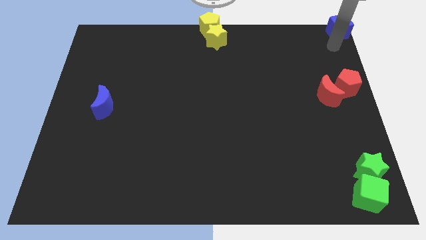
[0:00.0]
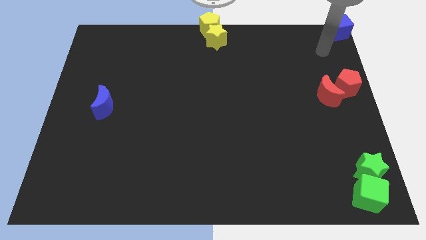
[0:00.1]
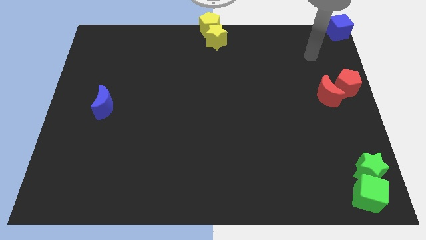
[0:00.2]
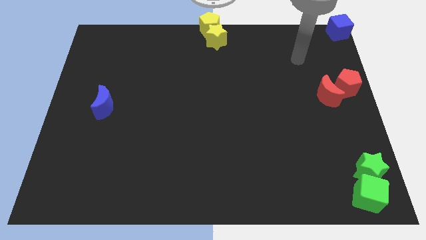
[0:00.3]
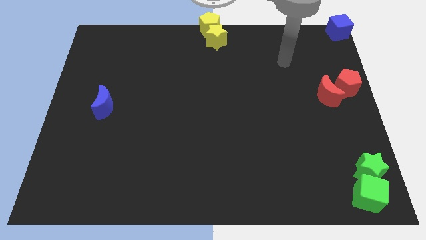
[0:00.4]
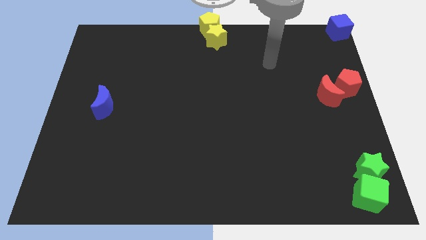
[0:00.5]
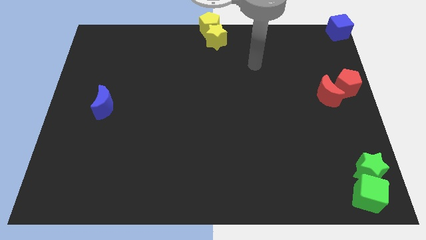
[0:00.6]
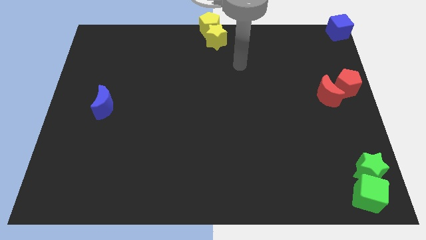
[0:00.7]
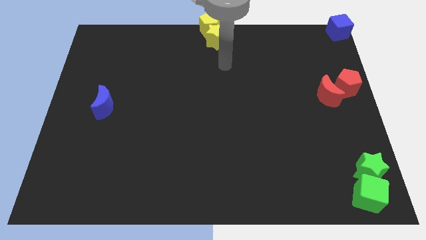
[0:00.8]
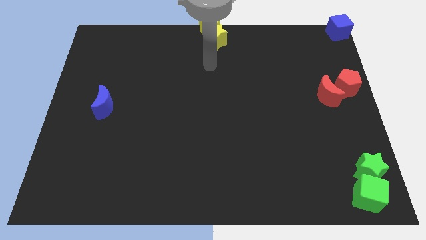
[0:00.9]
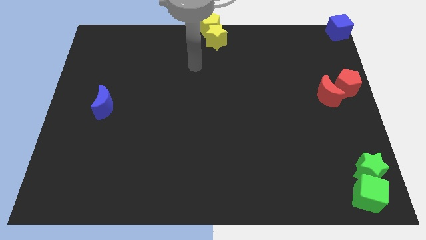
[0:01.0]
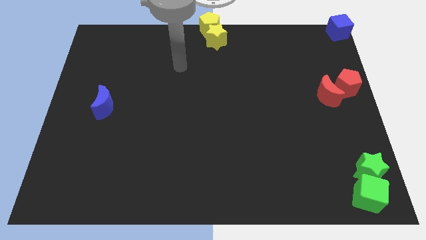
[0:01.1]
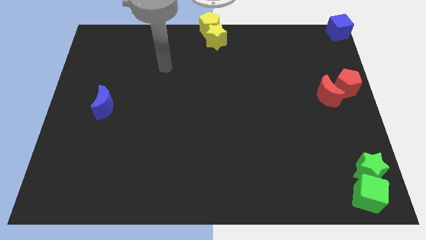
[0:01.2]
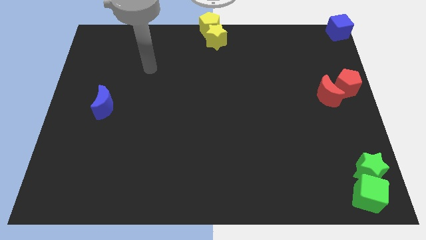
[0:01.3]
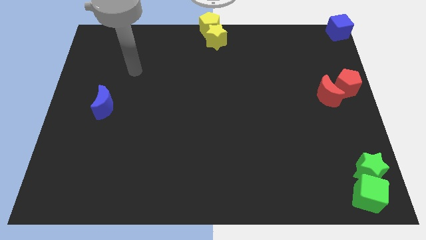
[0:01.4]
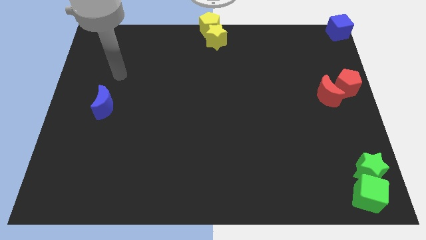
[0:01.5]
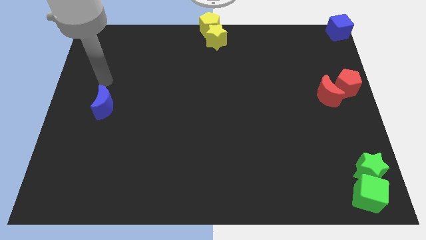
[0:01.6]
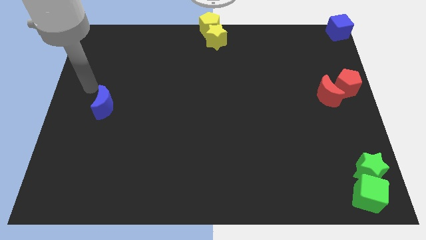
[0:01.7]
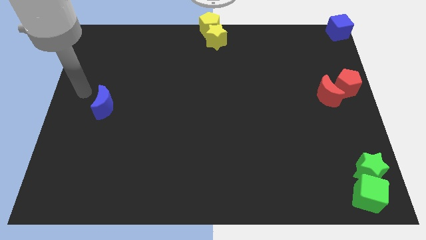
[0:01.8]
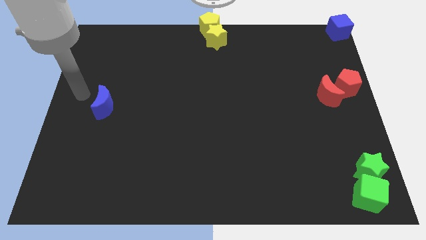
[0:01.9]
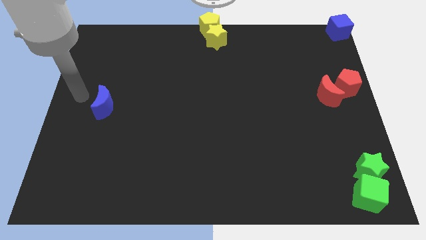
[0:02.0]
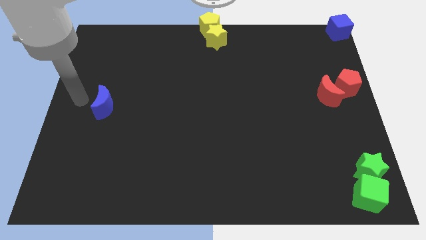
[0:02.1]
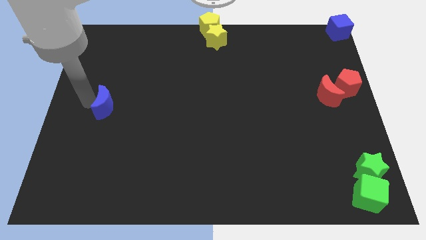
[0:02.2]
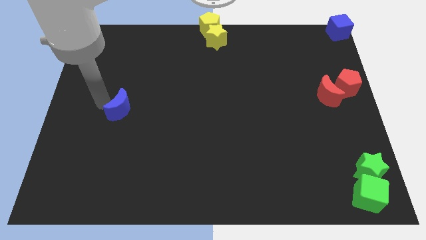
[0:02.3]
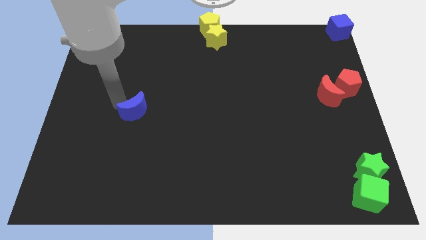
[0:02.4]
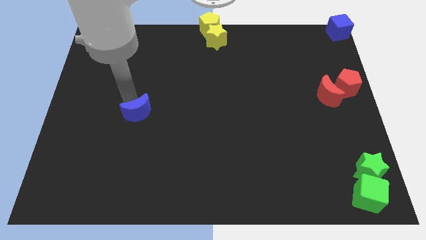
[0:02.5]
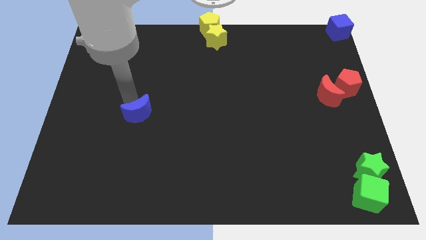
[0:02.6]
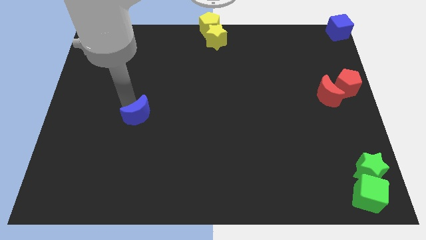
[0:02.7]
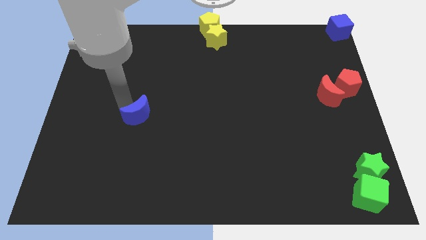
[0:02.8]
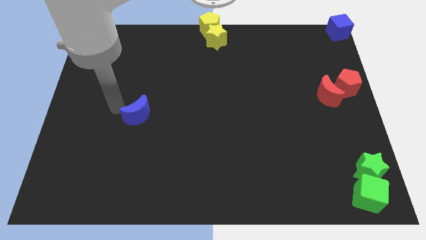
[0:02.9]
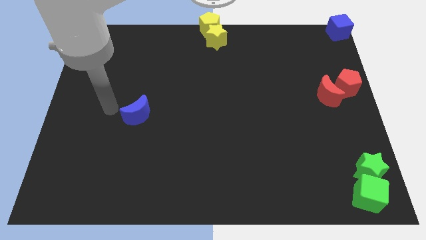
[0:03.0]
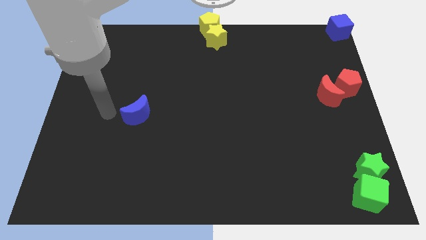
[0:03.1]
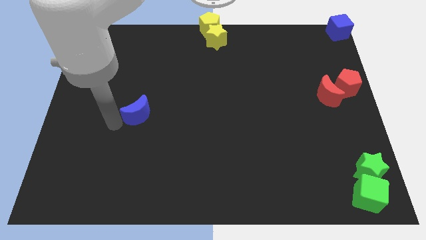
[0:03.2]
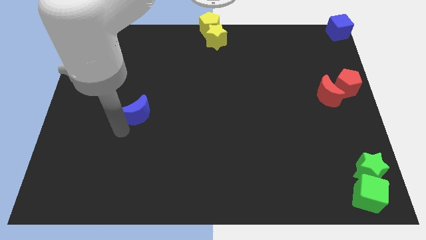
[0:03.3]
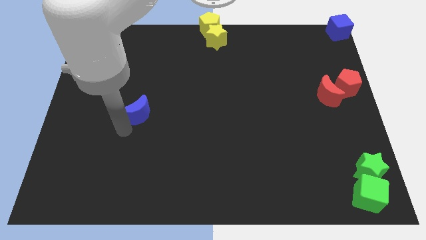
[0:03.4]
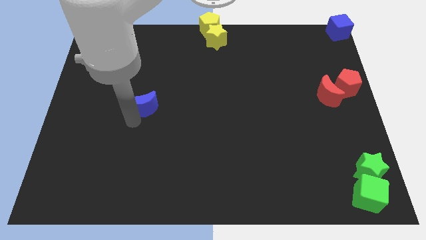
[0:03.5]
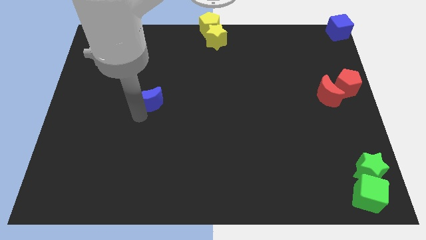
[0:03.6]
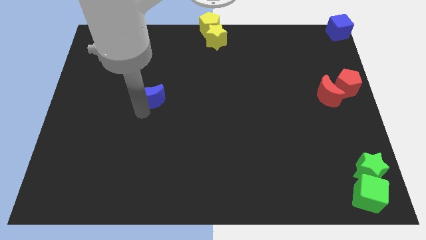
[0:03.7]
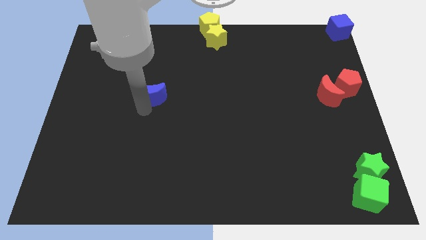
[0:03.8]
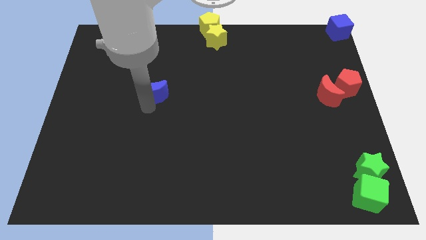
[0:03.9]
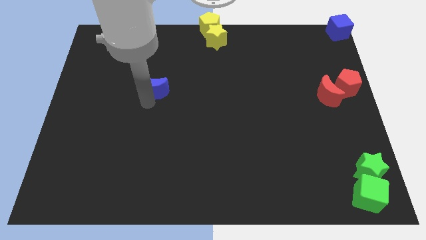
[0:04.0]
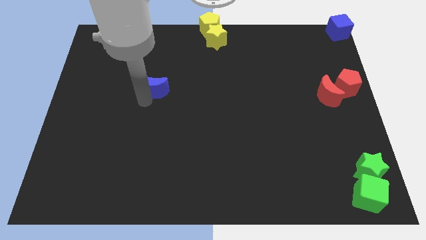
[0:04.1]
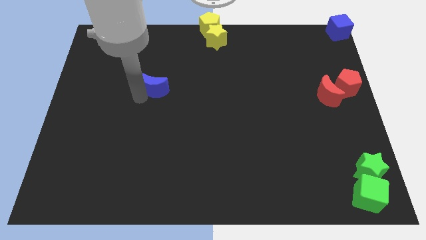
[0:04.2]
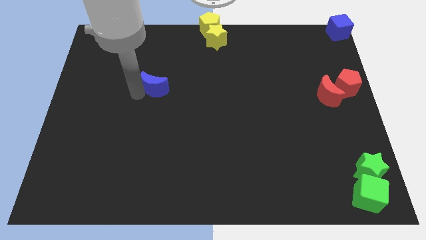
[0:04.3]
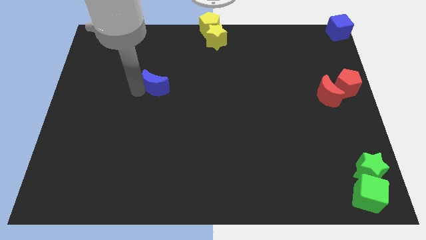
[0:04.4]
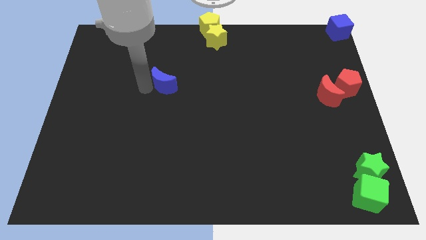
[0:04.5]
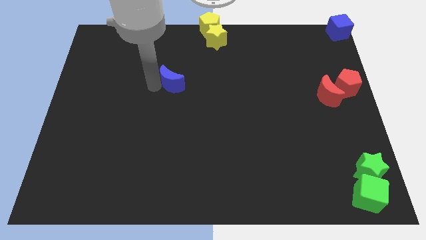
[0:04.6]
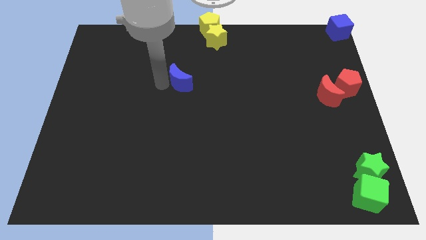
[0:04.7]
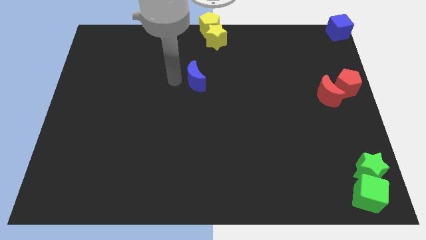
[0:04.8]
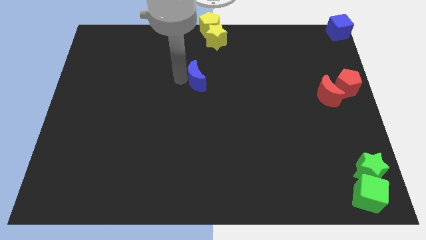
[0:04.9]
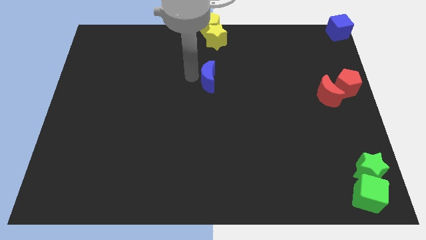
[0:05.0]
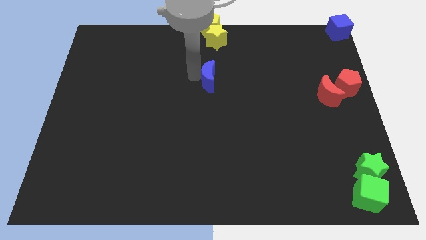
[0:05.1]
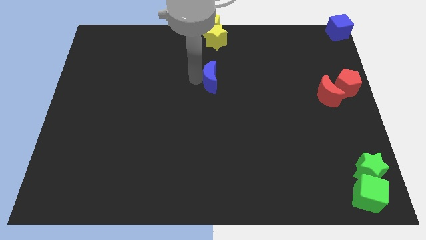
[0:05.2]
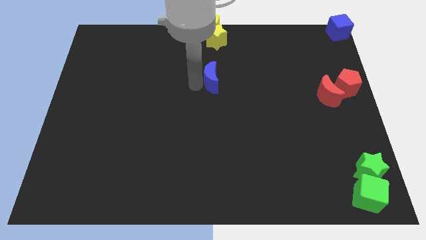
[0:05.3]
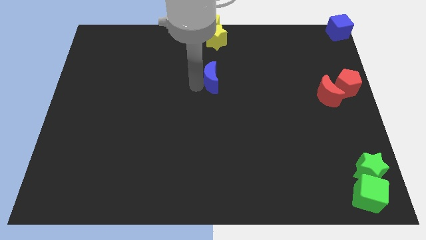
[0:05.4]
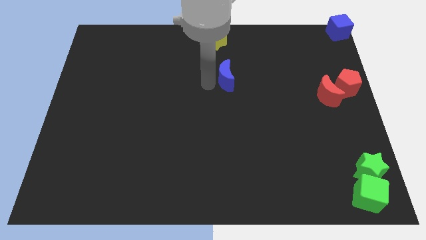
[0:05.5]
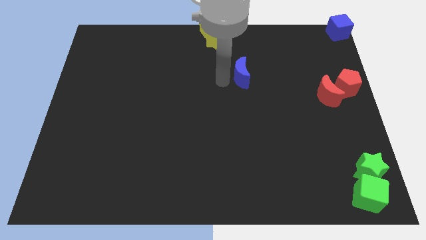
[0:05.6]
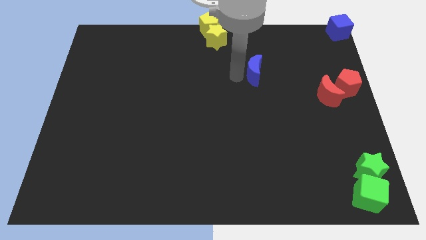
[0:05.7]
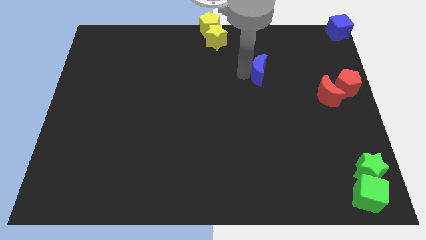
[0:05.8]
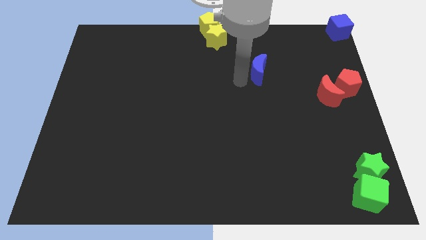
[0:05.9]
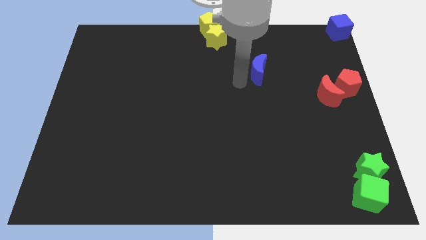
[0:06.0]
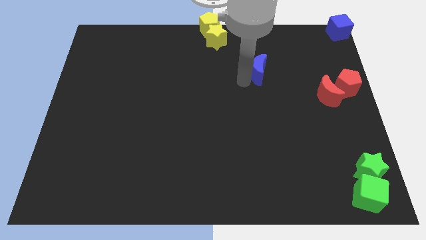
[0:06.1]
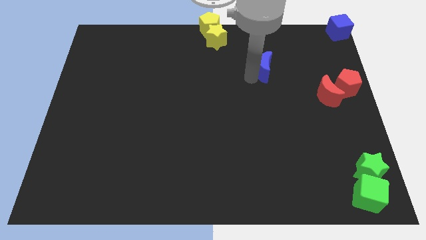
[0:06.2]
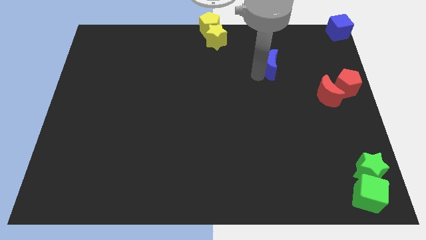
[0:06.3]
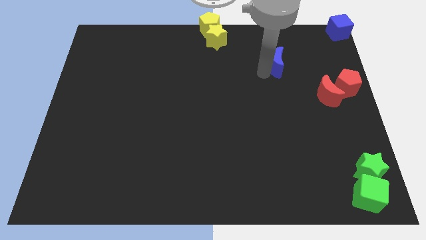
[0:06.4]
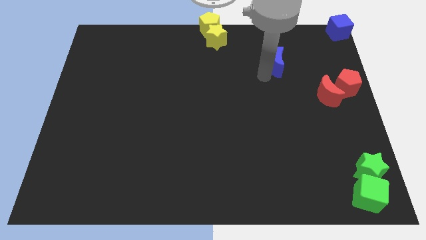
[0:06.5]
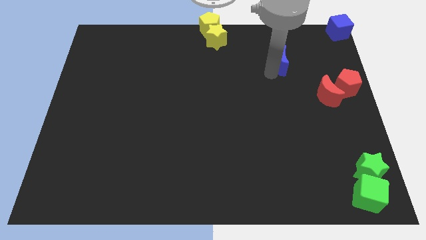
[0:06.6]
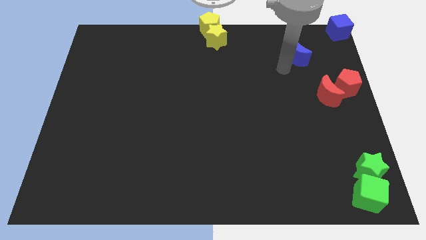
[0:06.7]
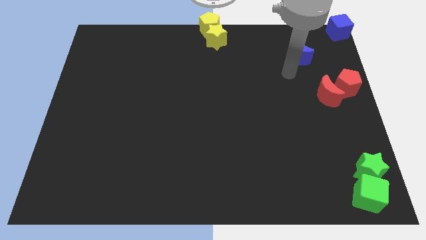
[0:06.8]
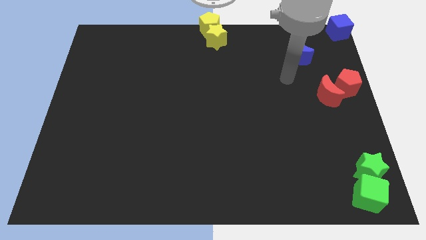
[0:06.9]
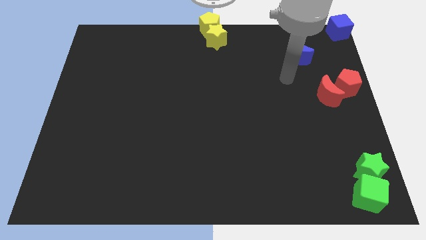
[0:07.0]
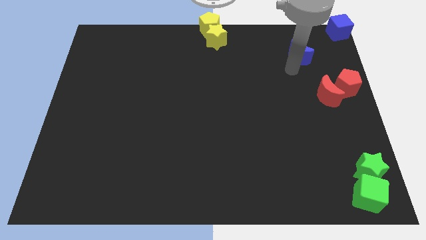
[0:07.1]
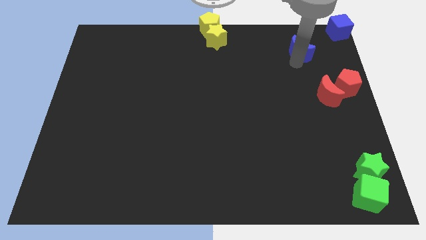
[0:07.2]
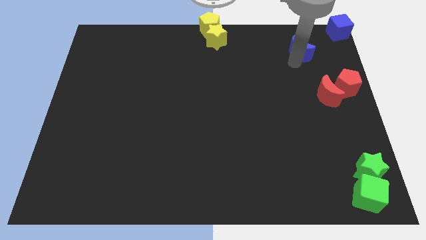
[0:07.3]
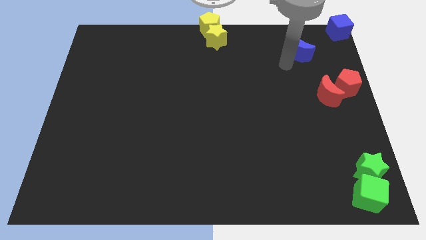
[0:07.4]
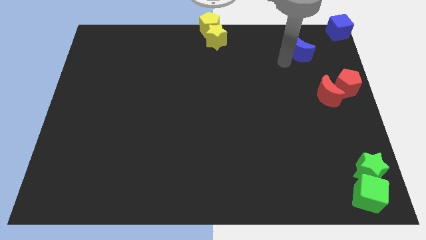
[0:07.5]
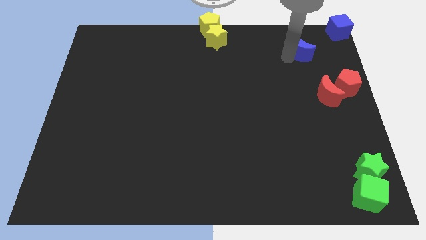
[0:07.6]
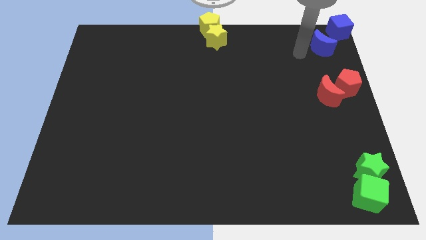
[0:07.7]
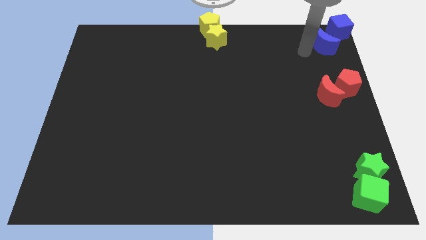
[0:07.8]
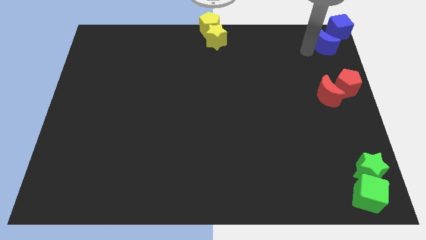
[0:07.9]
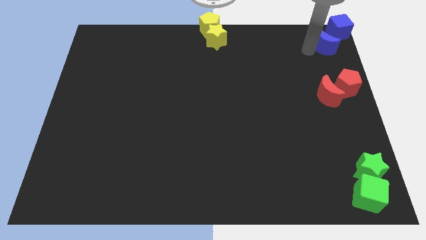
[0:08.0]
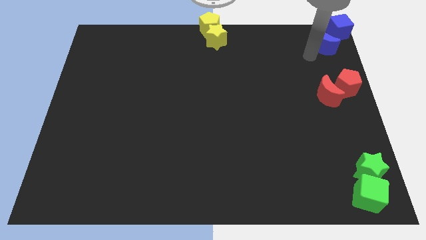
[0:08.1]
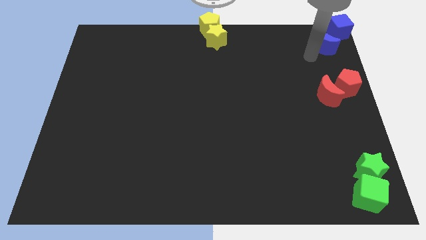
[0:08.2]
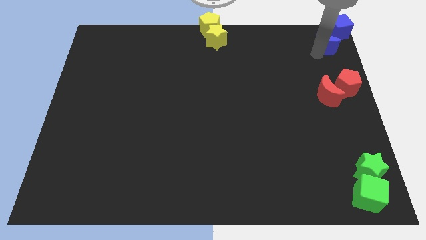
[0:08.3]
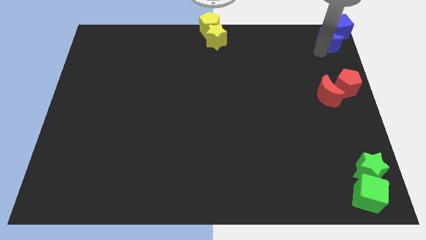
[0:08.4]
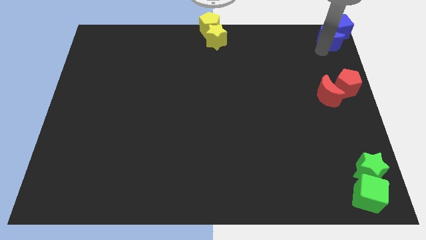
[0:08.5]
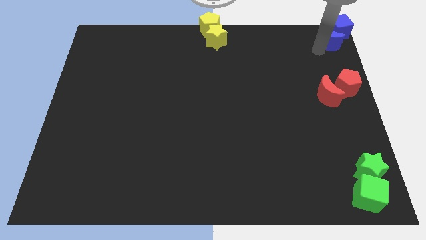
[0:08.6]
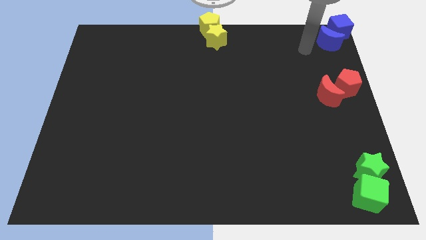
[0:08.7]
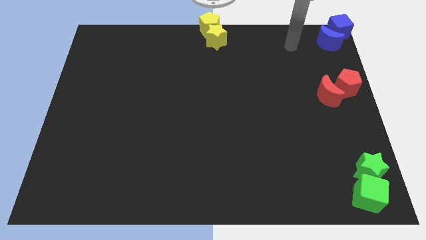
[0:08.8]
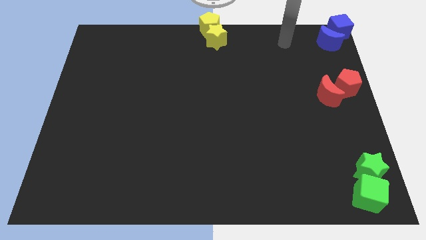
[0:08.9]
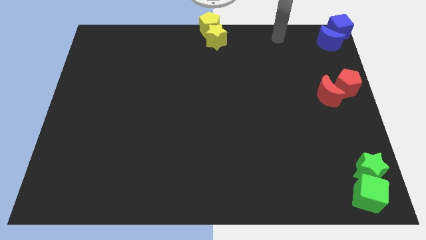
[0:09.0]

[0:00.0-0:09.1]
place the blue crescent near the blue cube
